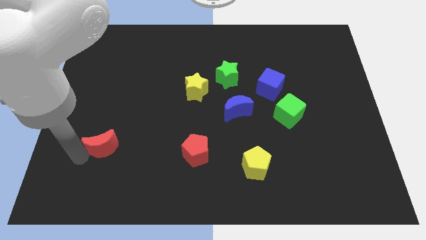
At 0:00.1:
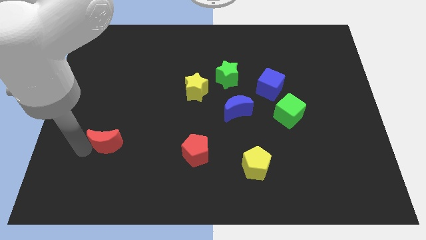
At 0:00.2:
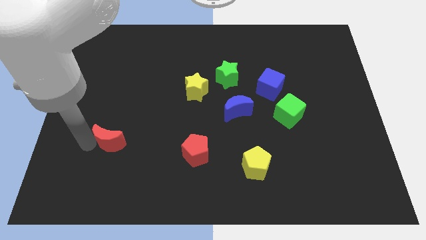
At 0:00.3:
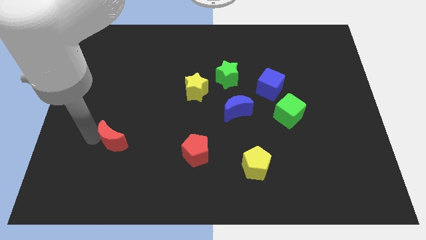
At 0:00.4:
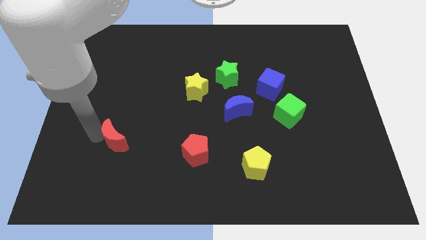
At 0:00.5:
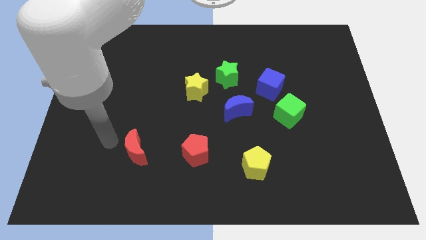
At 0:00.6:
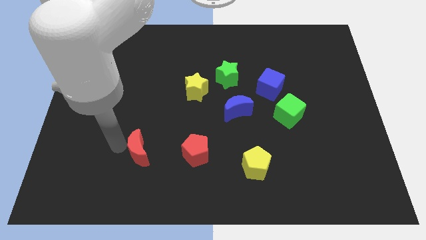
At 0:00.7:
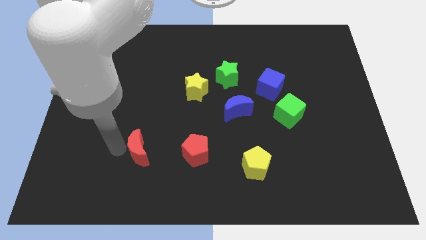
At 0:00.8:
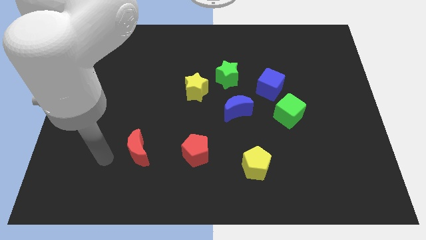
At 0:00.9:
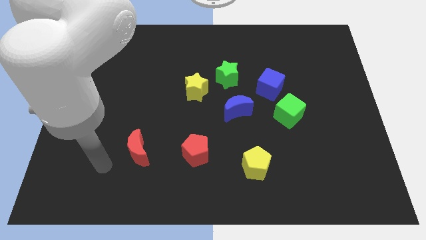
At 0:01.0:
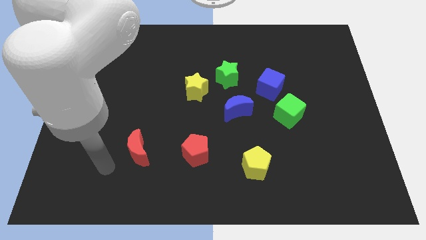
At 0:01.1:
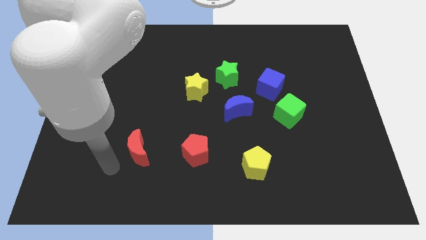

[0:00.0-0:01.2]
move the red moon horizontally left of the red pentagon

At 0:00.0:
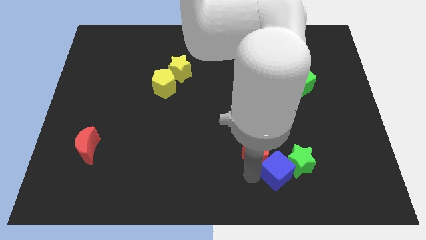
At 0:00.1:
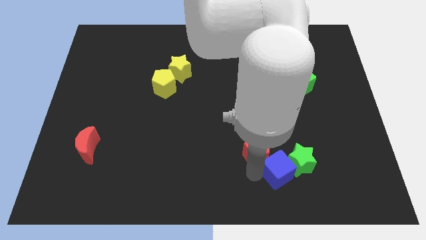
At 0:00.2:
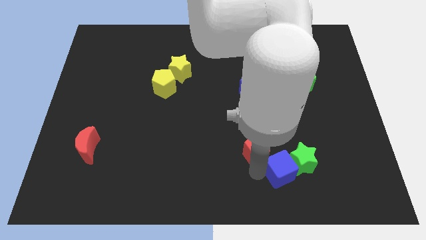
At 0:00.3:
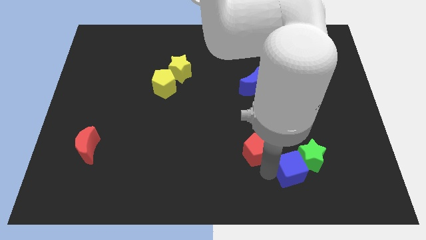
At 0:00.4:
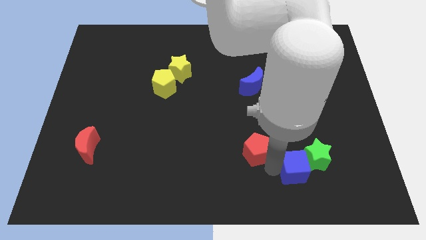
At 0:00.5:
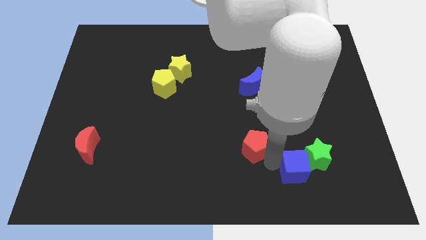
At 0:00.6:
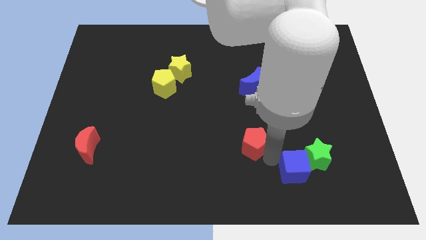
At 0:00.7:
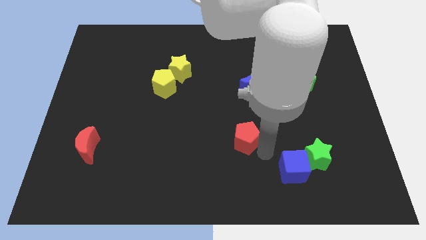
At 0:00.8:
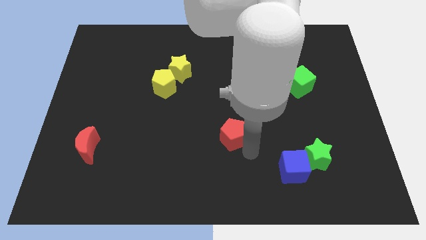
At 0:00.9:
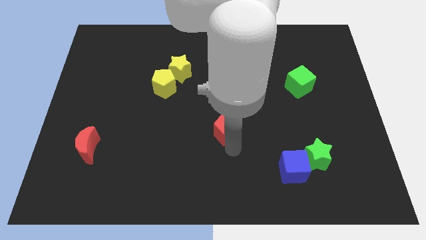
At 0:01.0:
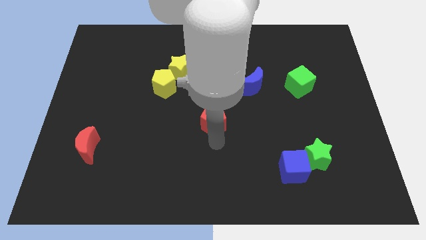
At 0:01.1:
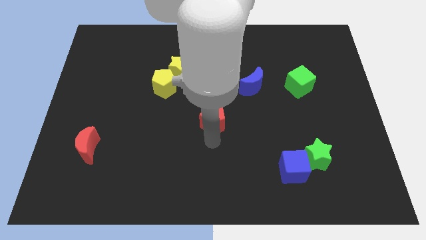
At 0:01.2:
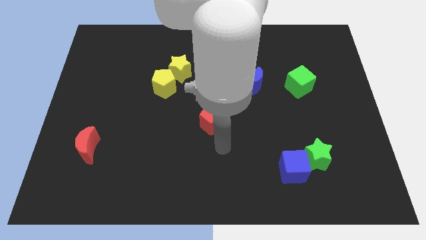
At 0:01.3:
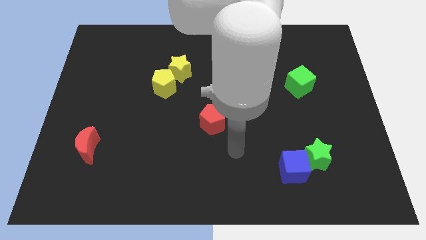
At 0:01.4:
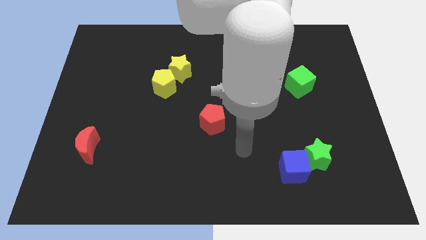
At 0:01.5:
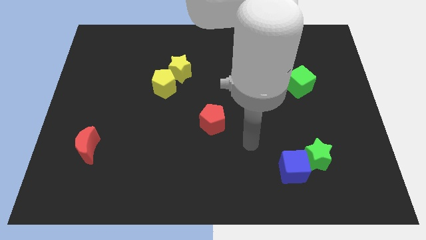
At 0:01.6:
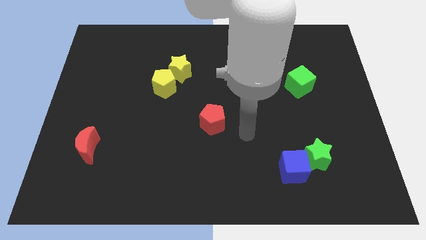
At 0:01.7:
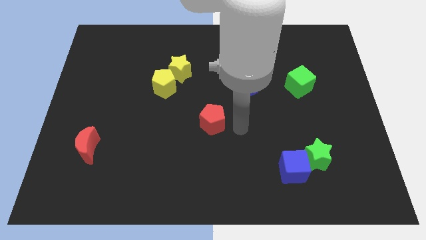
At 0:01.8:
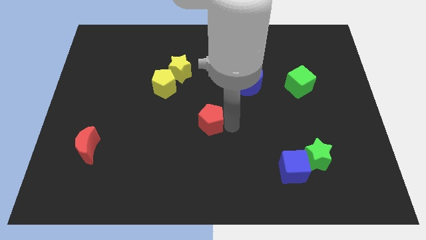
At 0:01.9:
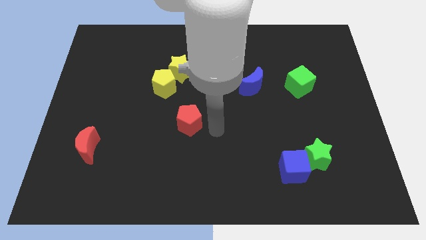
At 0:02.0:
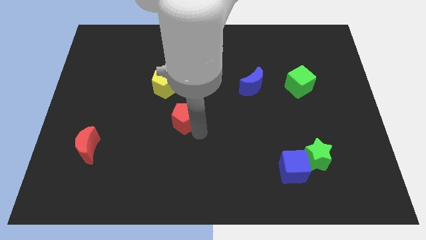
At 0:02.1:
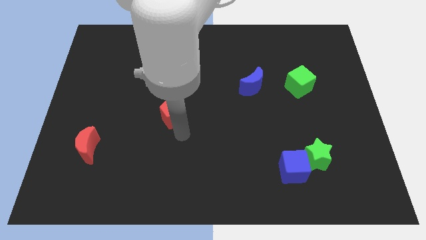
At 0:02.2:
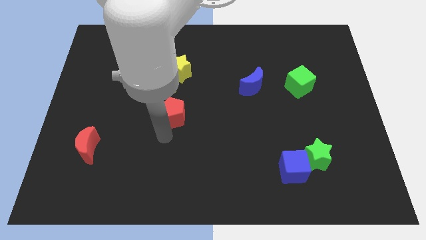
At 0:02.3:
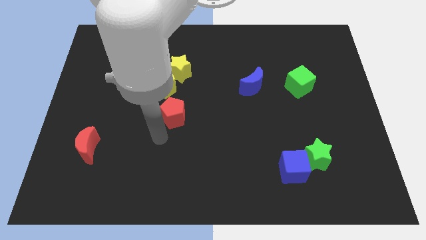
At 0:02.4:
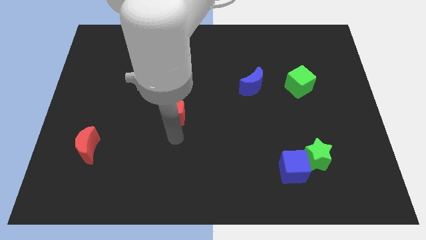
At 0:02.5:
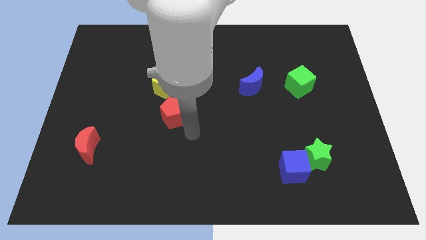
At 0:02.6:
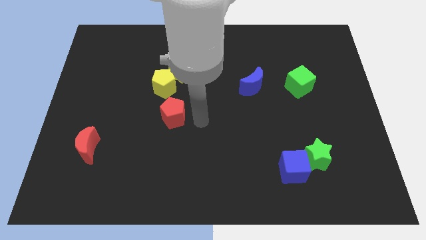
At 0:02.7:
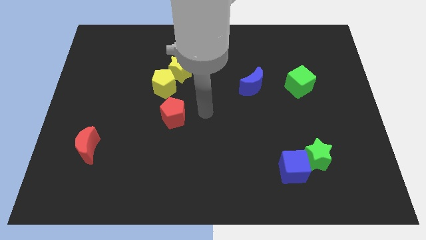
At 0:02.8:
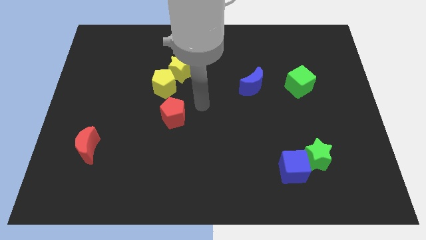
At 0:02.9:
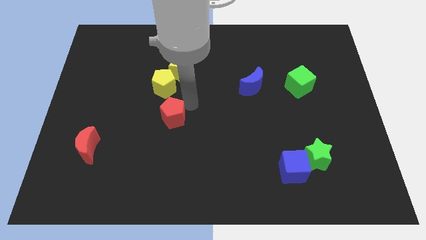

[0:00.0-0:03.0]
place the red pentagon under the yellow pentagon

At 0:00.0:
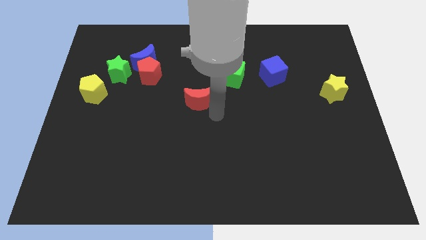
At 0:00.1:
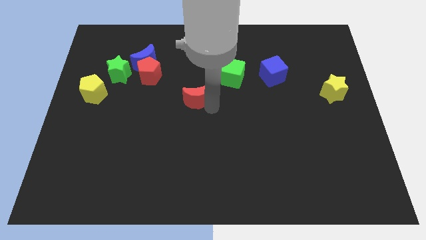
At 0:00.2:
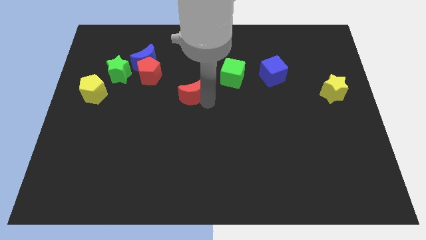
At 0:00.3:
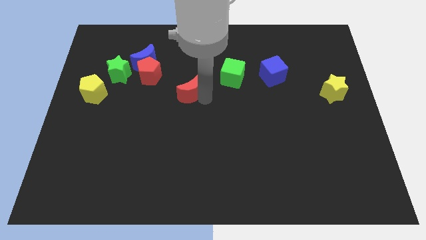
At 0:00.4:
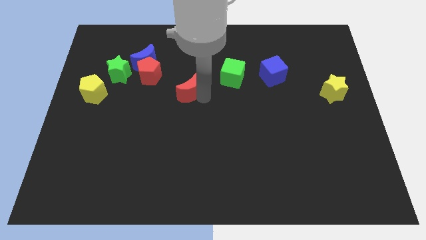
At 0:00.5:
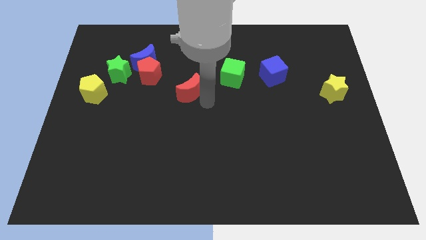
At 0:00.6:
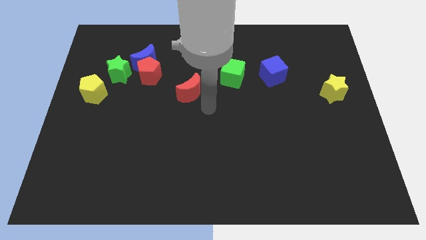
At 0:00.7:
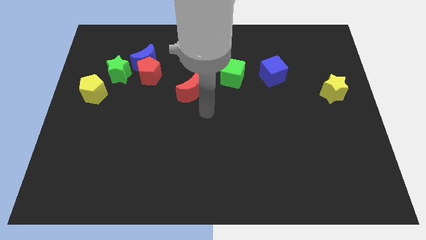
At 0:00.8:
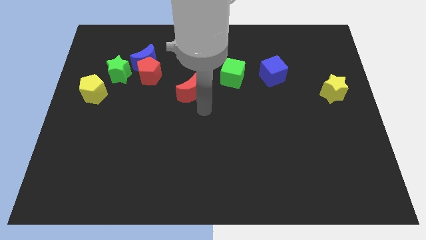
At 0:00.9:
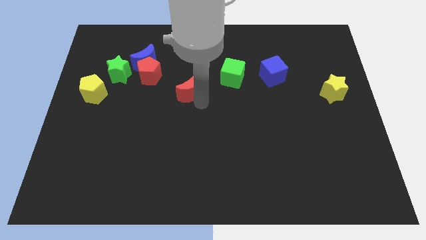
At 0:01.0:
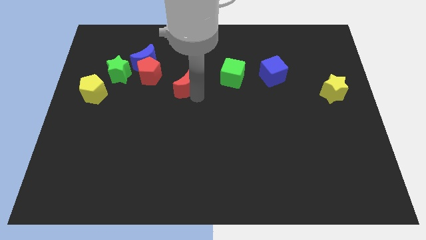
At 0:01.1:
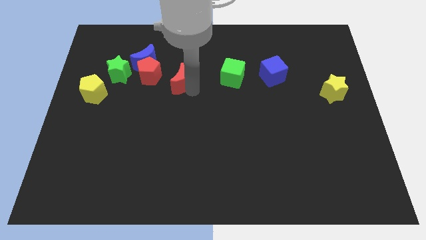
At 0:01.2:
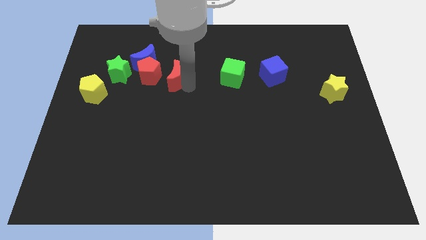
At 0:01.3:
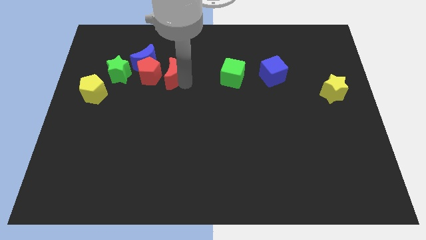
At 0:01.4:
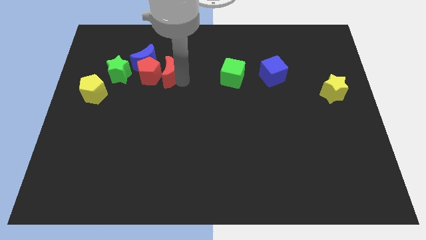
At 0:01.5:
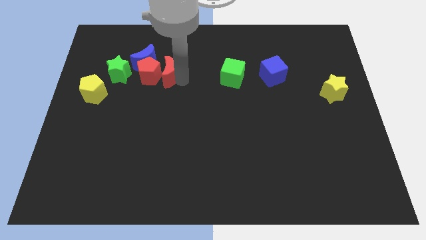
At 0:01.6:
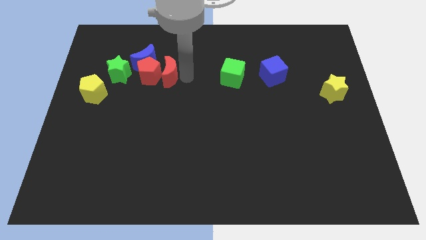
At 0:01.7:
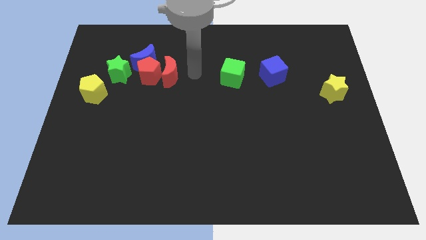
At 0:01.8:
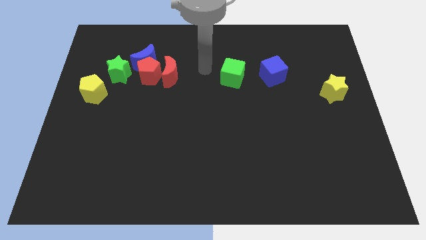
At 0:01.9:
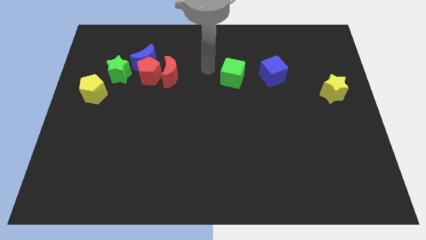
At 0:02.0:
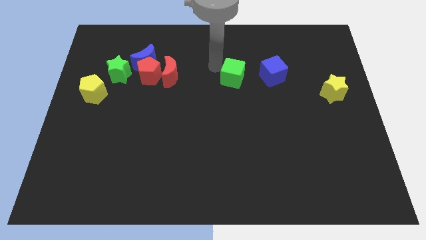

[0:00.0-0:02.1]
slide red moon into red pentagon

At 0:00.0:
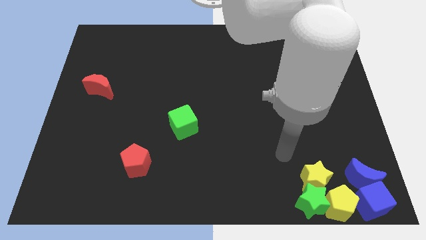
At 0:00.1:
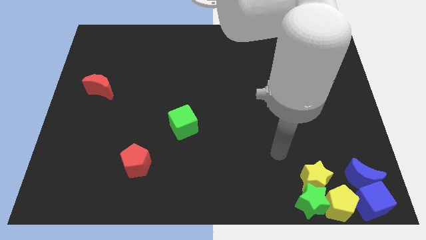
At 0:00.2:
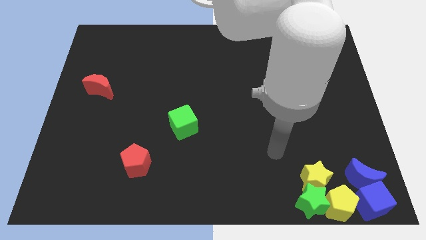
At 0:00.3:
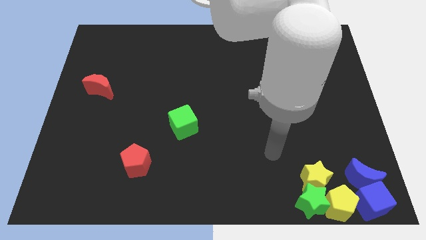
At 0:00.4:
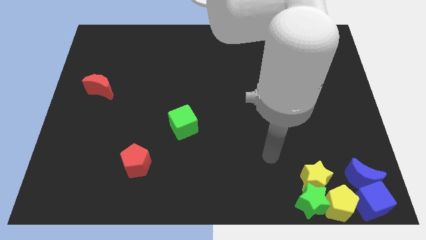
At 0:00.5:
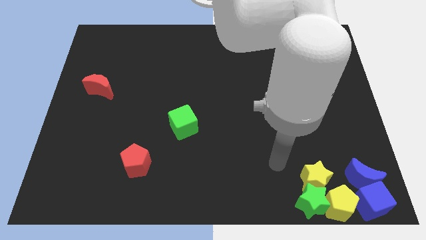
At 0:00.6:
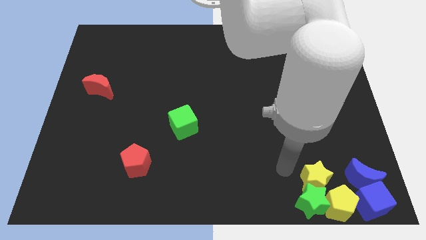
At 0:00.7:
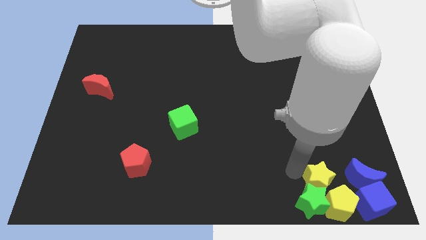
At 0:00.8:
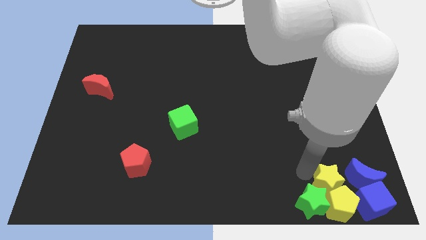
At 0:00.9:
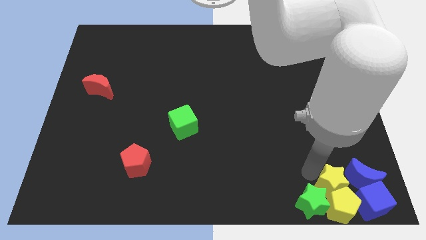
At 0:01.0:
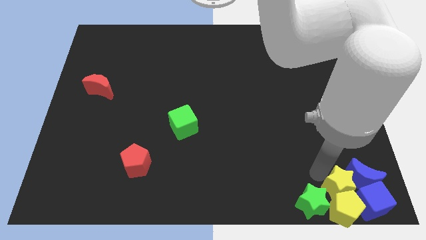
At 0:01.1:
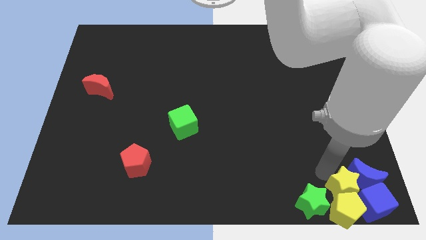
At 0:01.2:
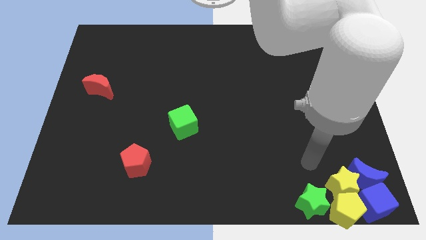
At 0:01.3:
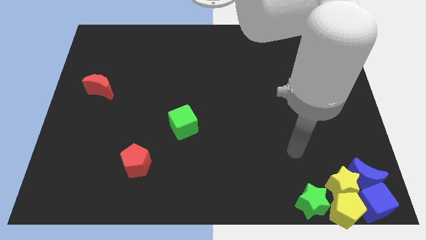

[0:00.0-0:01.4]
push the yellow star into a group of blocks

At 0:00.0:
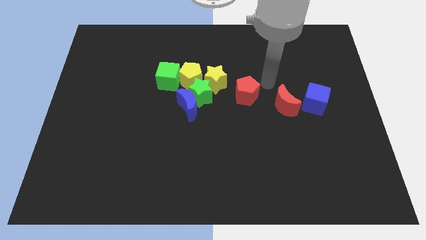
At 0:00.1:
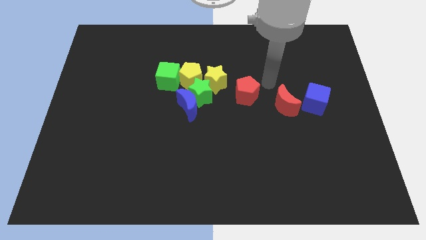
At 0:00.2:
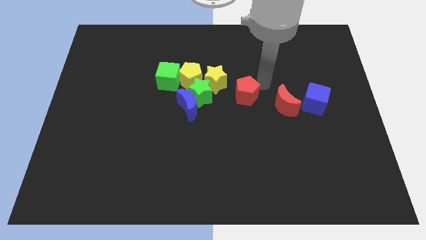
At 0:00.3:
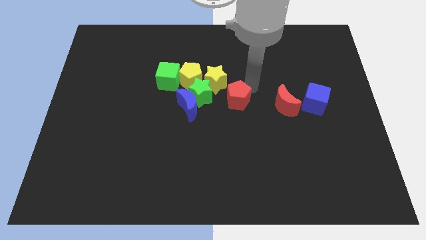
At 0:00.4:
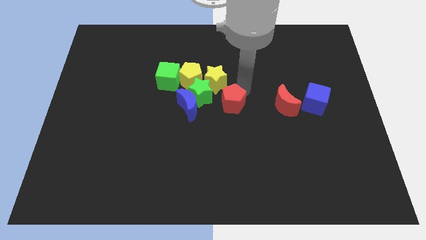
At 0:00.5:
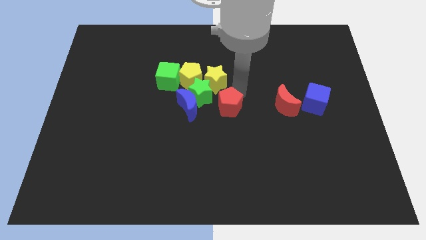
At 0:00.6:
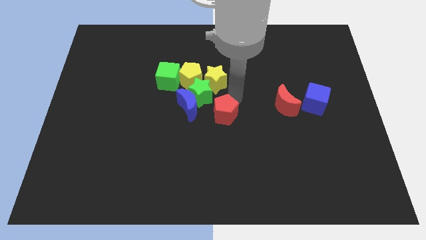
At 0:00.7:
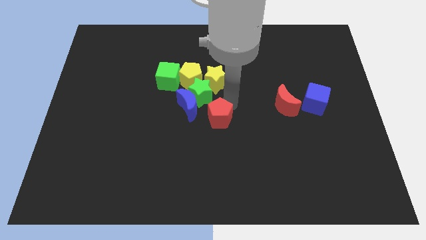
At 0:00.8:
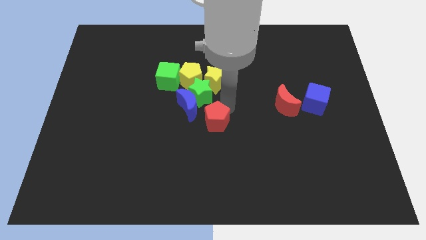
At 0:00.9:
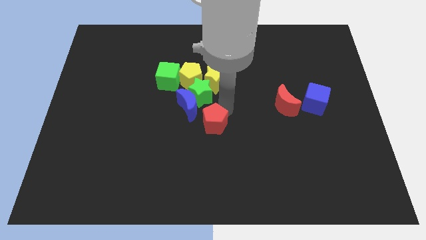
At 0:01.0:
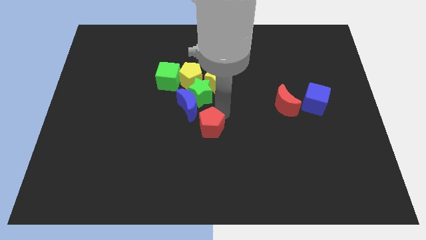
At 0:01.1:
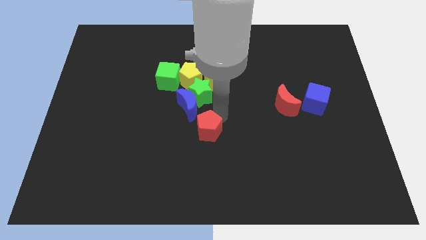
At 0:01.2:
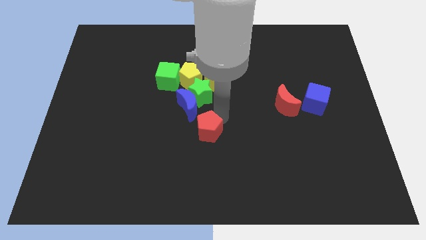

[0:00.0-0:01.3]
place the red pentagon below the group of blocks
